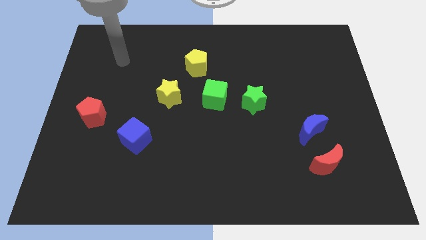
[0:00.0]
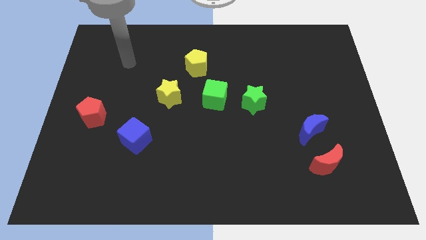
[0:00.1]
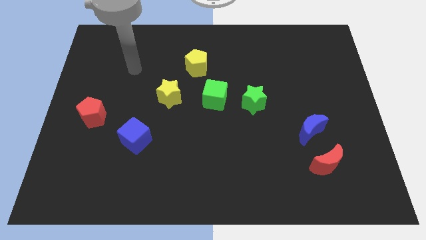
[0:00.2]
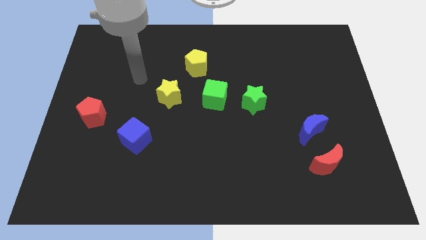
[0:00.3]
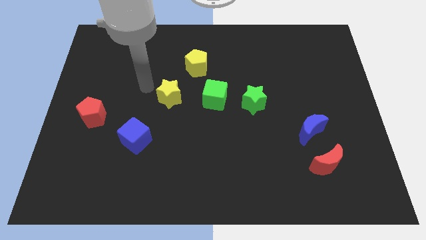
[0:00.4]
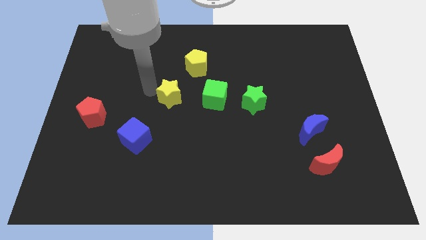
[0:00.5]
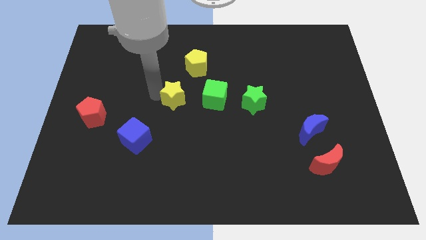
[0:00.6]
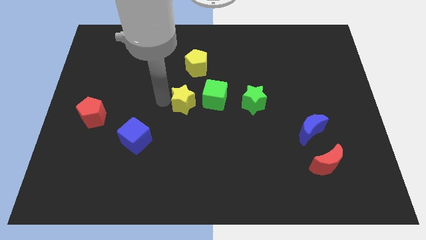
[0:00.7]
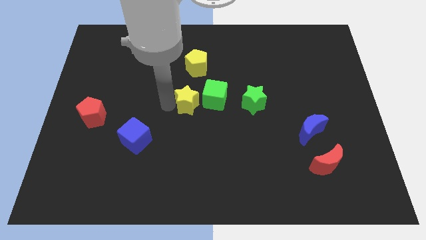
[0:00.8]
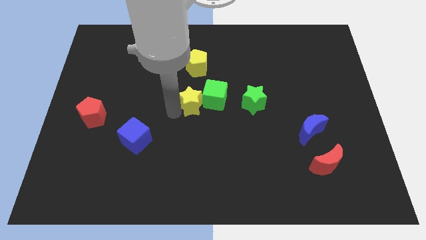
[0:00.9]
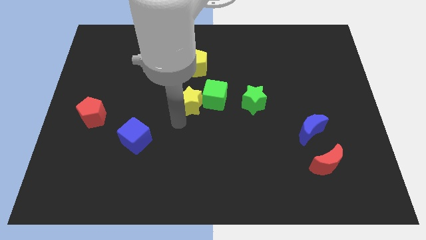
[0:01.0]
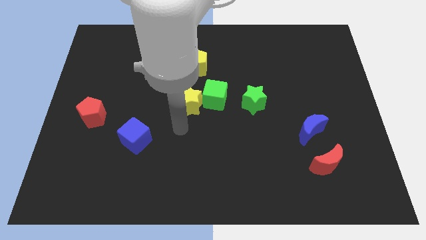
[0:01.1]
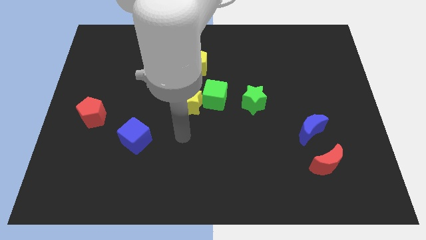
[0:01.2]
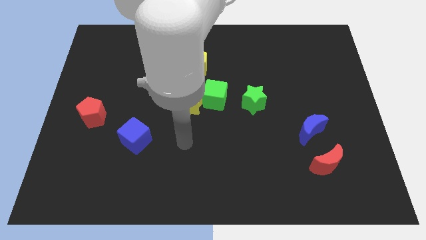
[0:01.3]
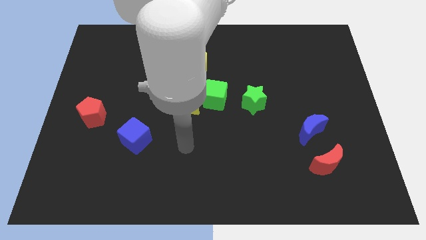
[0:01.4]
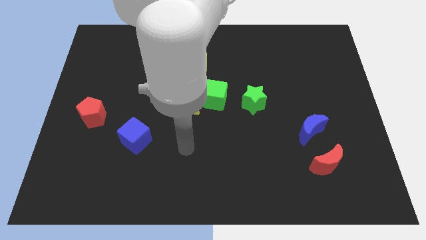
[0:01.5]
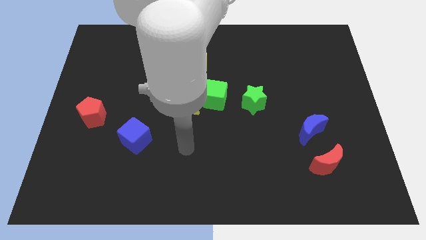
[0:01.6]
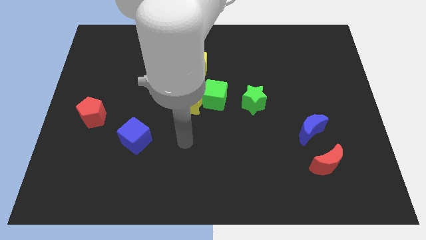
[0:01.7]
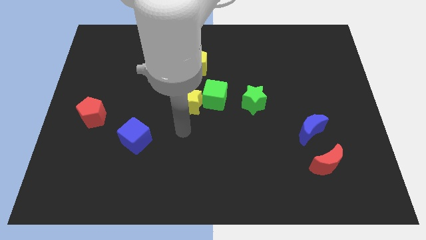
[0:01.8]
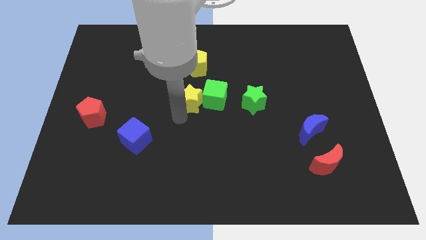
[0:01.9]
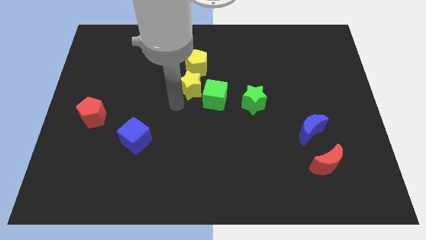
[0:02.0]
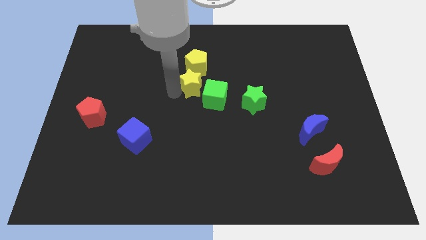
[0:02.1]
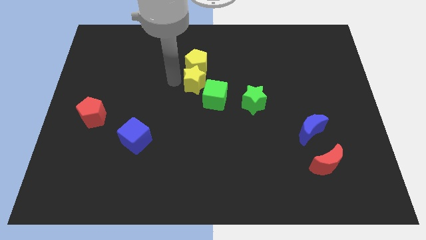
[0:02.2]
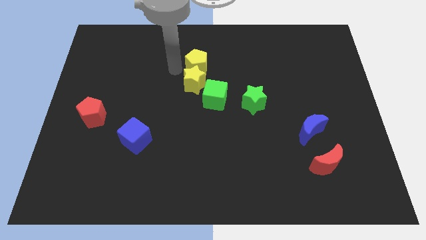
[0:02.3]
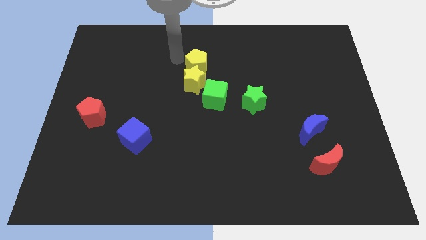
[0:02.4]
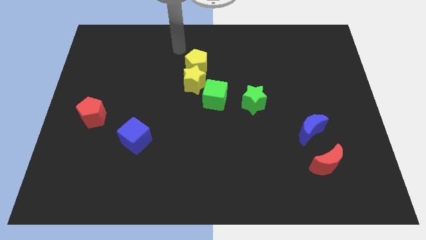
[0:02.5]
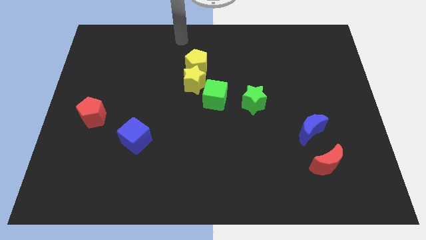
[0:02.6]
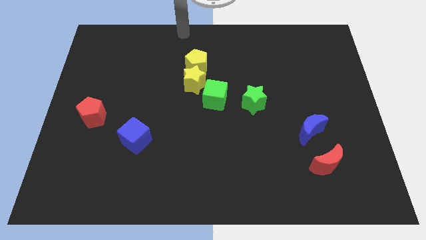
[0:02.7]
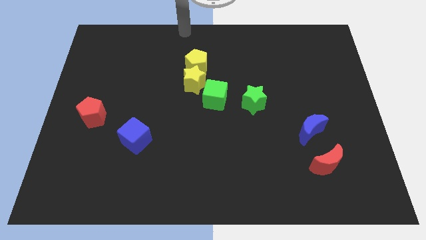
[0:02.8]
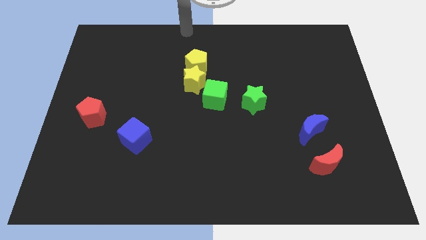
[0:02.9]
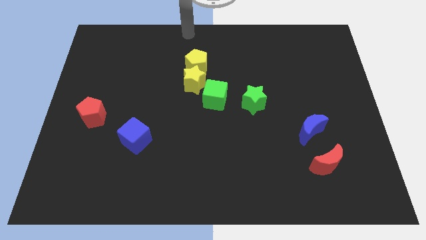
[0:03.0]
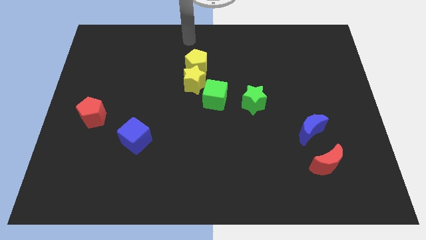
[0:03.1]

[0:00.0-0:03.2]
push the yellow star at the bottom of yellow pentagon

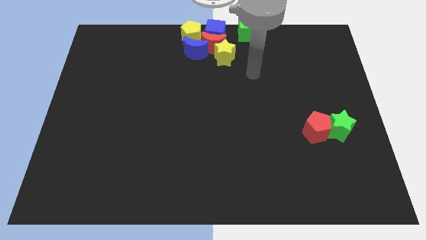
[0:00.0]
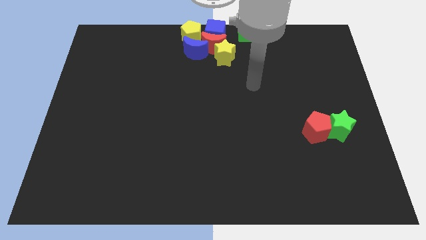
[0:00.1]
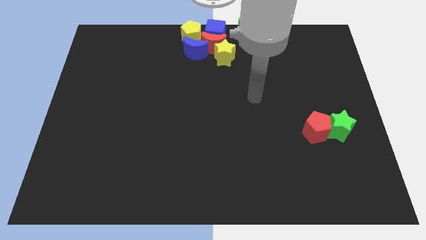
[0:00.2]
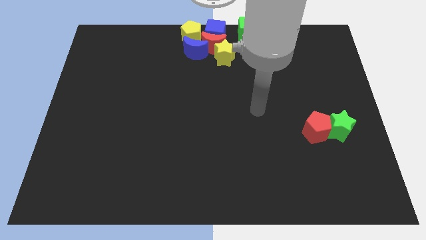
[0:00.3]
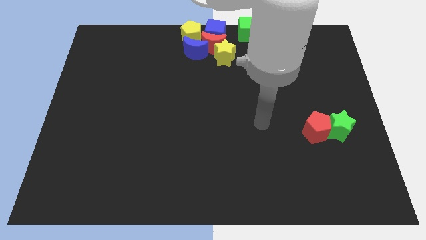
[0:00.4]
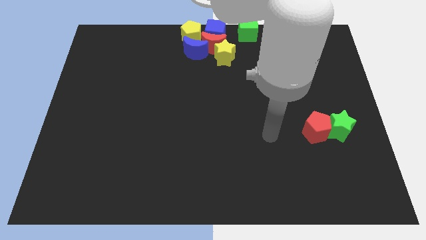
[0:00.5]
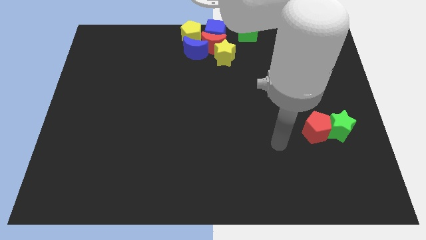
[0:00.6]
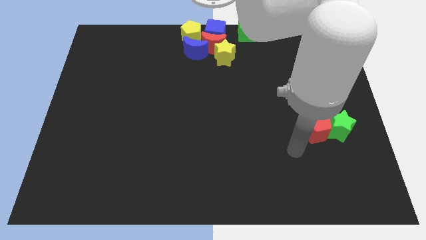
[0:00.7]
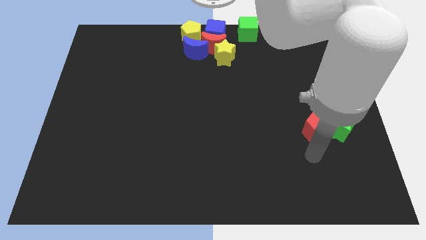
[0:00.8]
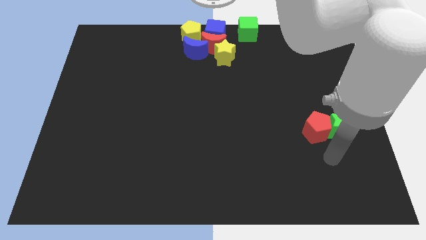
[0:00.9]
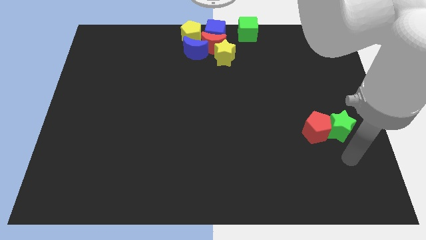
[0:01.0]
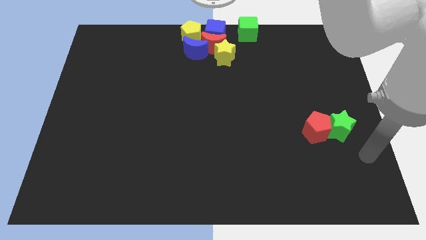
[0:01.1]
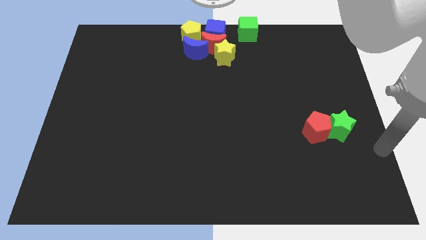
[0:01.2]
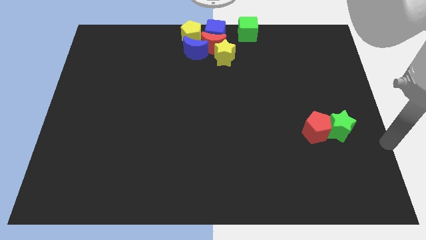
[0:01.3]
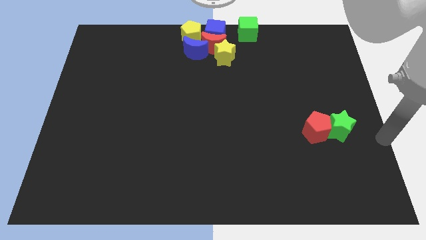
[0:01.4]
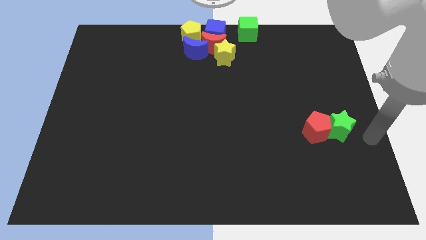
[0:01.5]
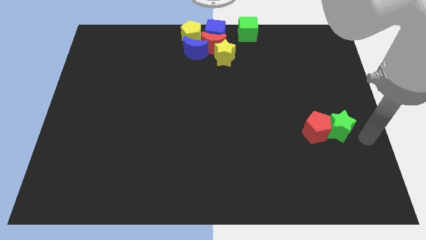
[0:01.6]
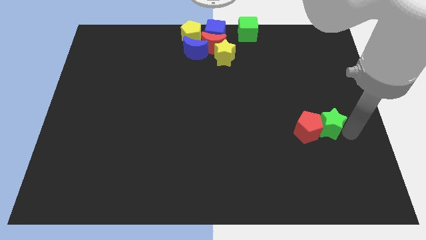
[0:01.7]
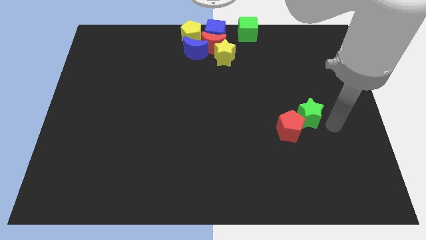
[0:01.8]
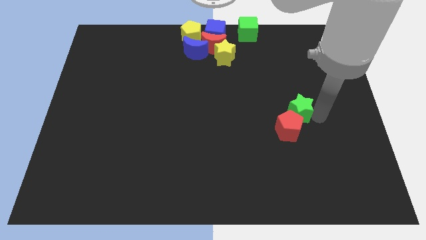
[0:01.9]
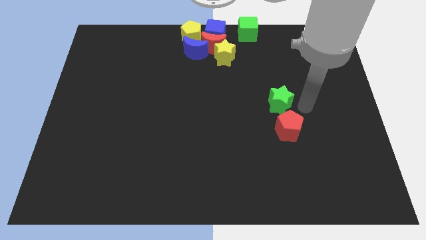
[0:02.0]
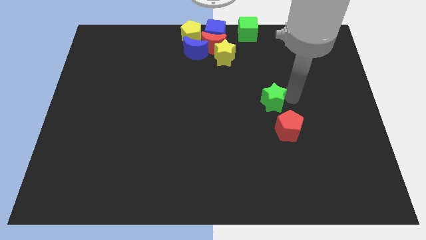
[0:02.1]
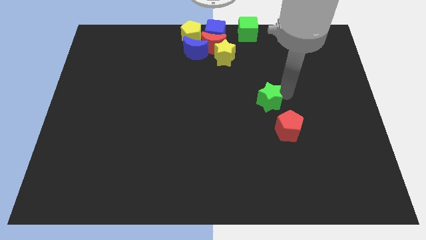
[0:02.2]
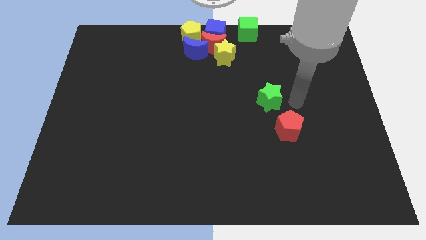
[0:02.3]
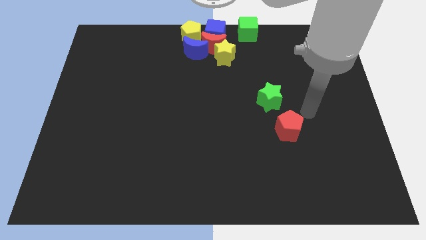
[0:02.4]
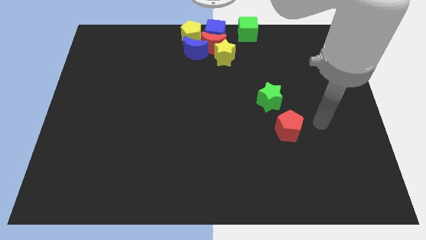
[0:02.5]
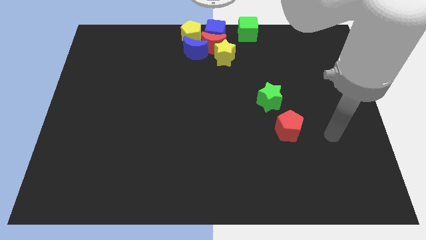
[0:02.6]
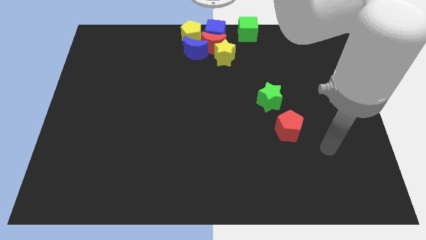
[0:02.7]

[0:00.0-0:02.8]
move the green star to the top left of the red pentagon

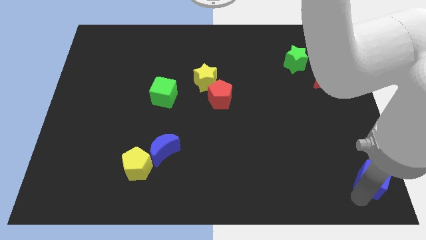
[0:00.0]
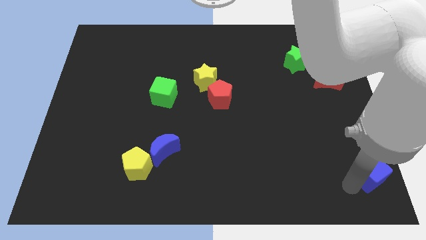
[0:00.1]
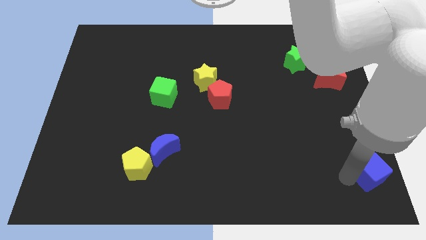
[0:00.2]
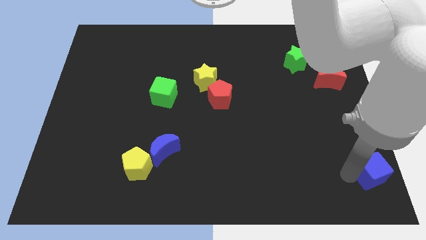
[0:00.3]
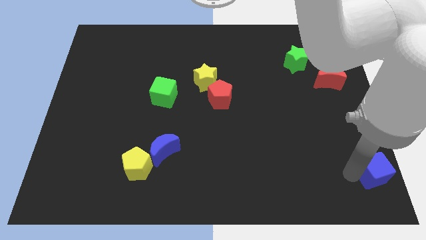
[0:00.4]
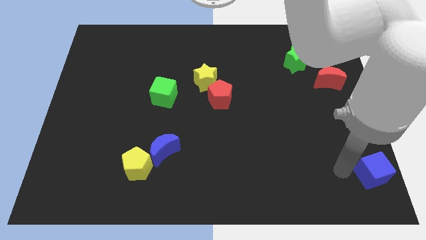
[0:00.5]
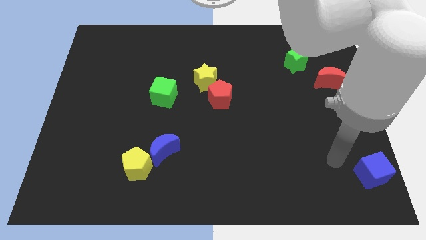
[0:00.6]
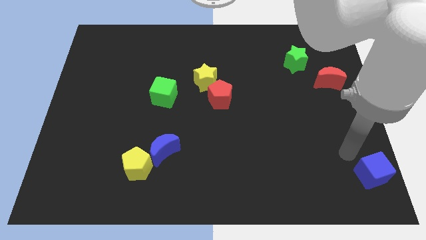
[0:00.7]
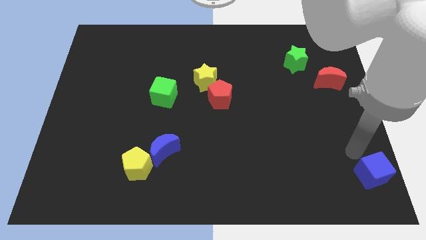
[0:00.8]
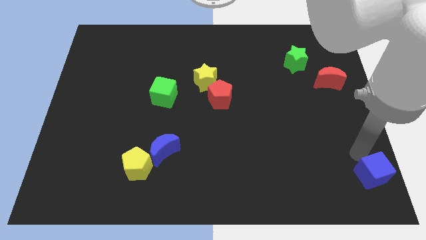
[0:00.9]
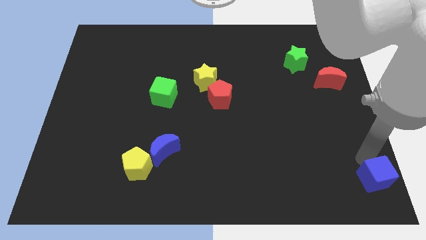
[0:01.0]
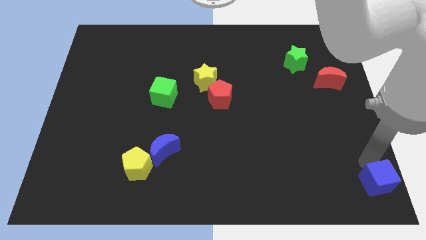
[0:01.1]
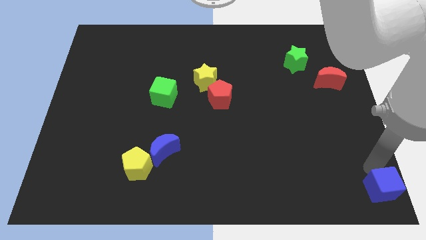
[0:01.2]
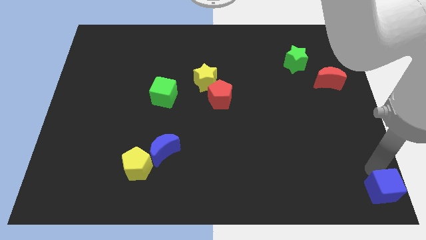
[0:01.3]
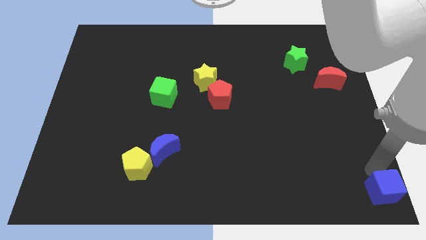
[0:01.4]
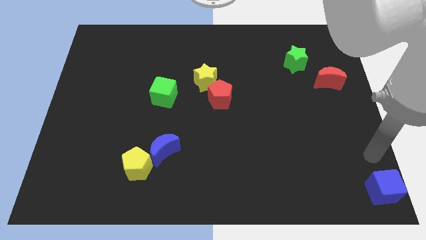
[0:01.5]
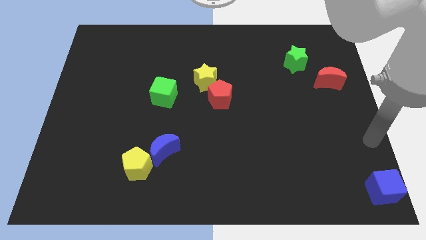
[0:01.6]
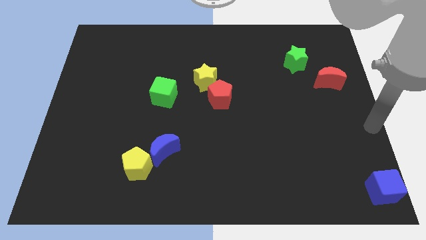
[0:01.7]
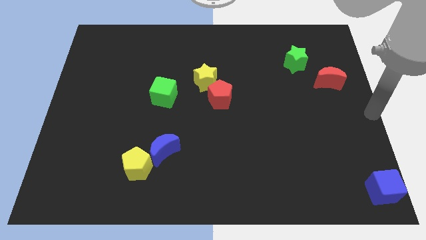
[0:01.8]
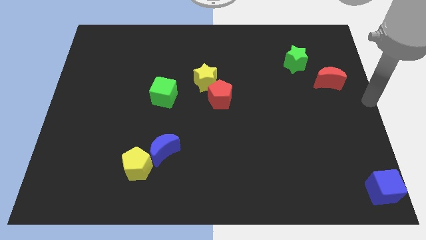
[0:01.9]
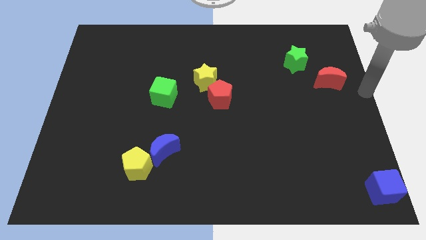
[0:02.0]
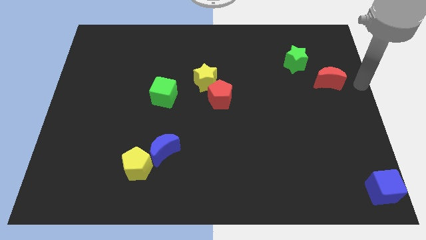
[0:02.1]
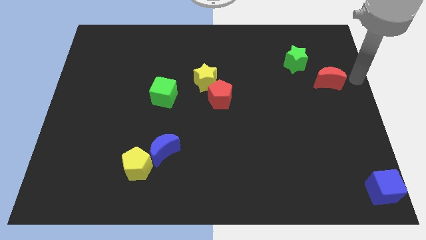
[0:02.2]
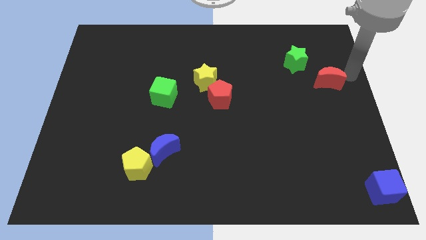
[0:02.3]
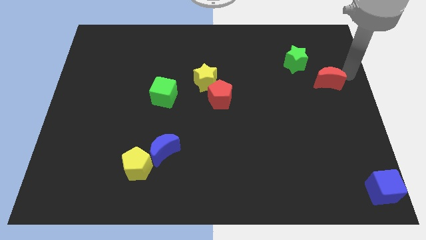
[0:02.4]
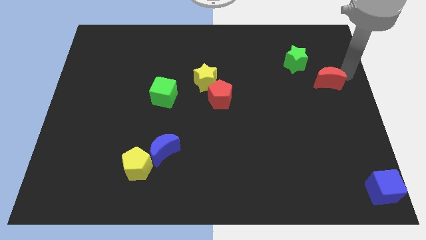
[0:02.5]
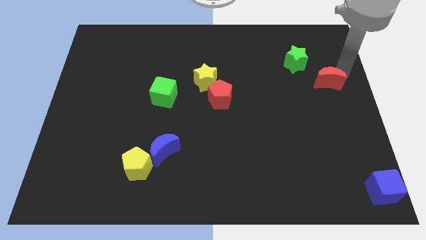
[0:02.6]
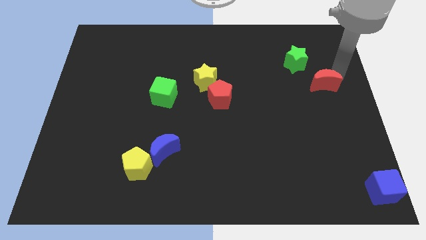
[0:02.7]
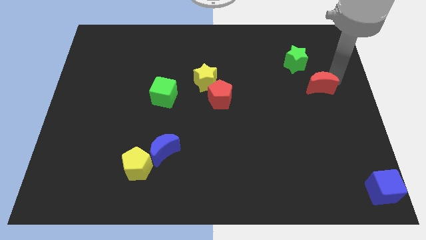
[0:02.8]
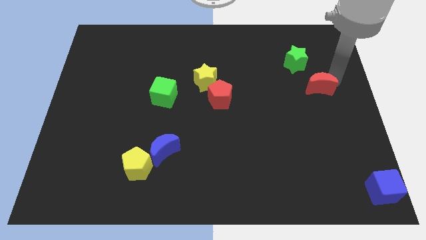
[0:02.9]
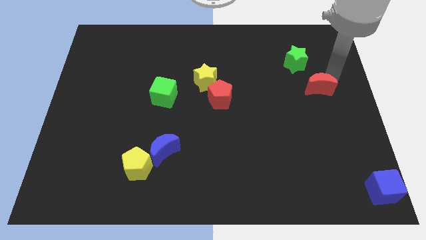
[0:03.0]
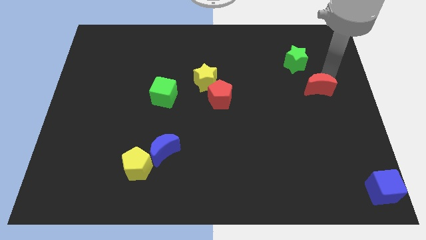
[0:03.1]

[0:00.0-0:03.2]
slightly move the red pentagon downwards
